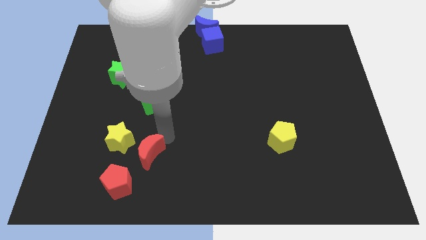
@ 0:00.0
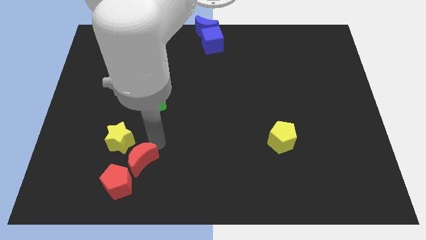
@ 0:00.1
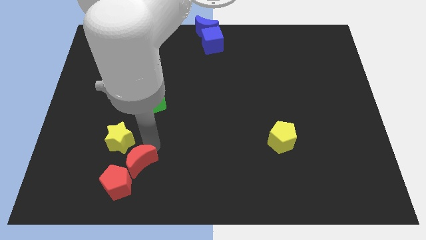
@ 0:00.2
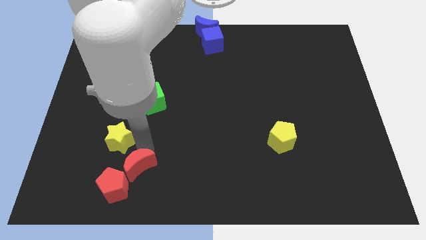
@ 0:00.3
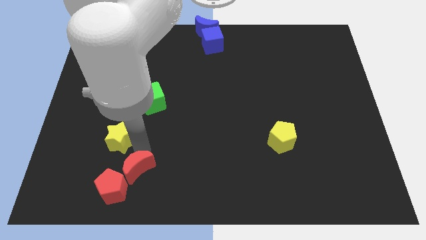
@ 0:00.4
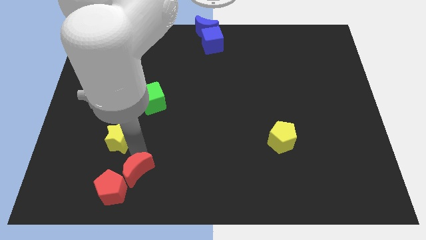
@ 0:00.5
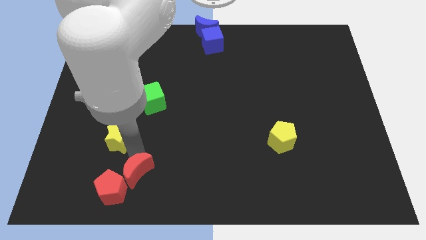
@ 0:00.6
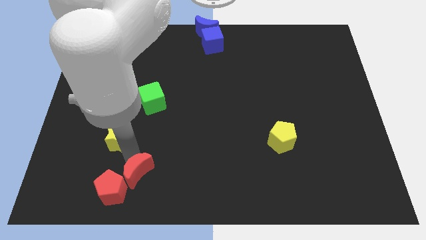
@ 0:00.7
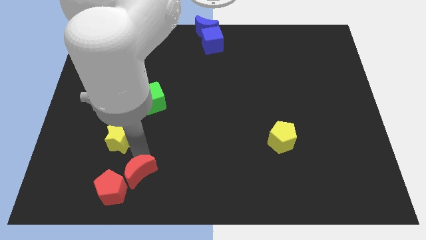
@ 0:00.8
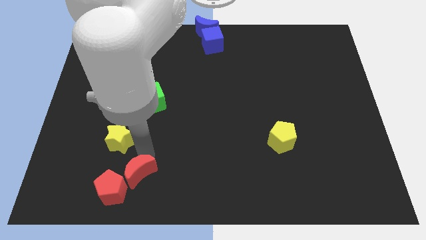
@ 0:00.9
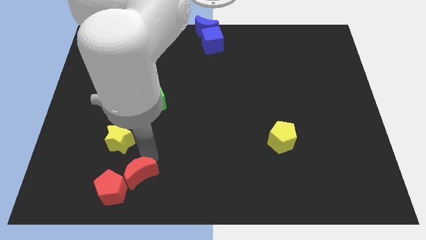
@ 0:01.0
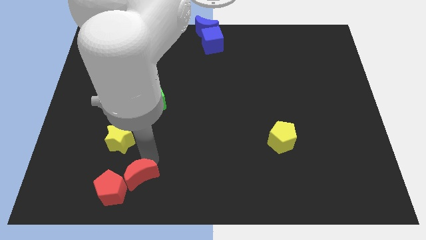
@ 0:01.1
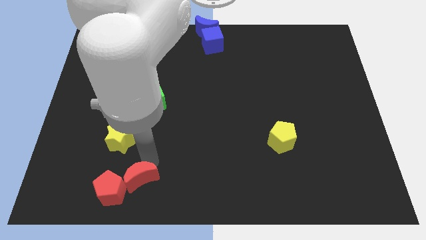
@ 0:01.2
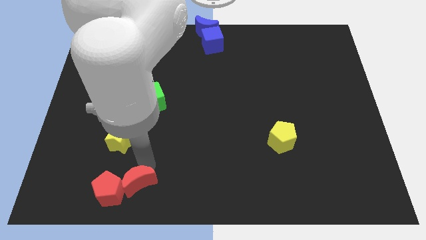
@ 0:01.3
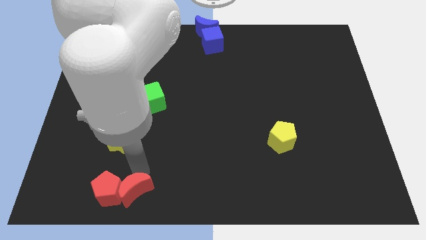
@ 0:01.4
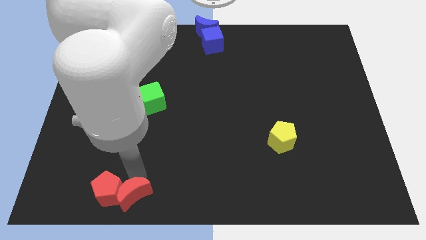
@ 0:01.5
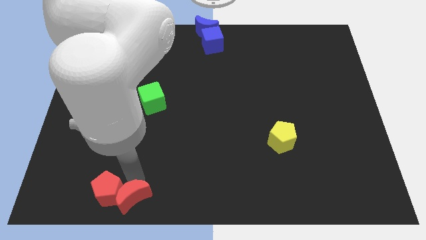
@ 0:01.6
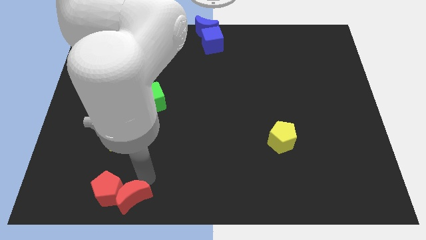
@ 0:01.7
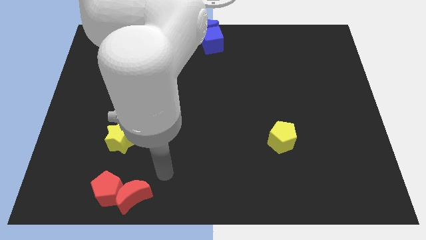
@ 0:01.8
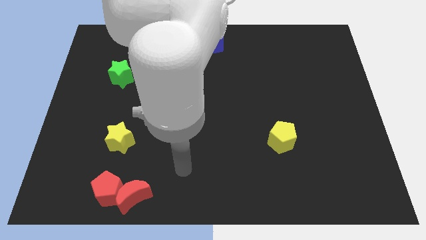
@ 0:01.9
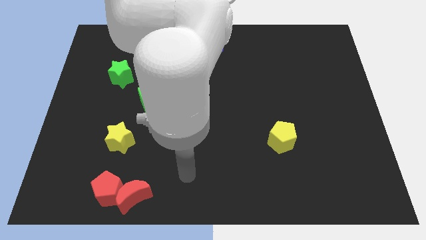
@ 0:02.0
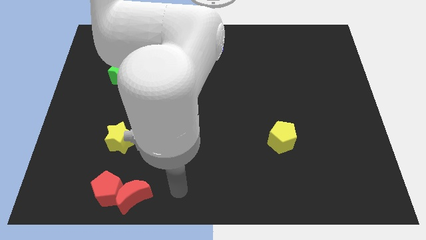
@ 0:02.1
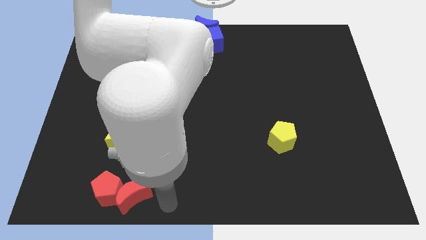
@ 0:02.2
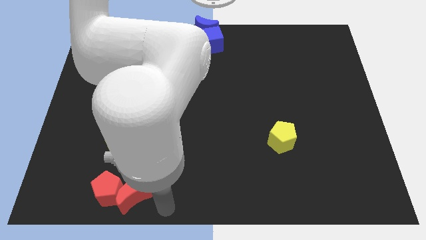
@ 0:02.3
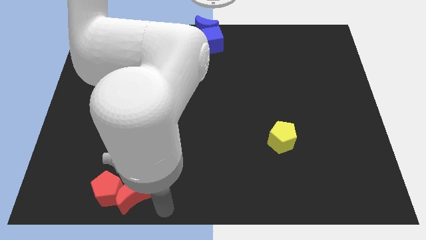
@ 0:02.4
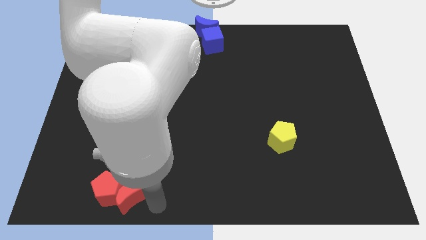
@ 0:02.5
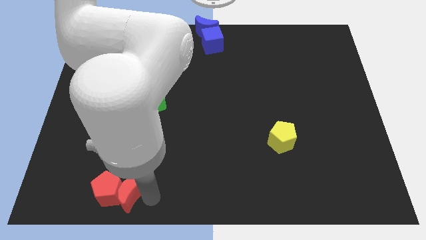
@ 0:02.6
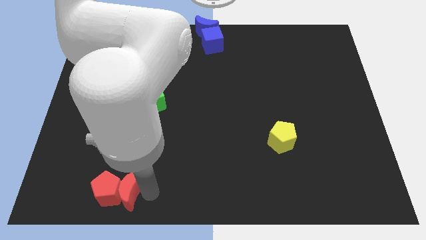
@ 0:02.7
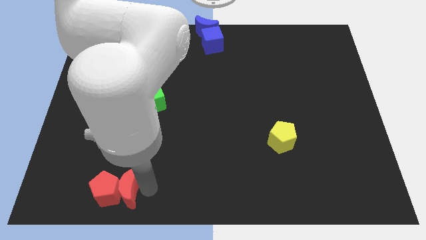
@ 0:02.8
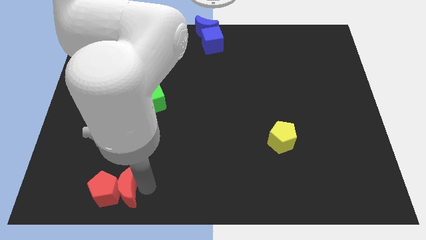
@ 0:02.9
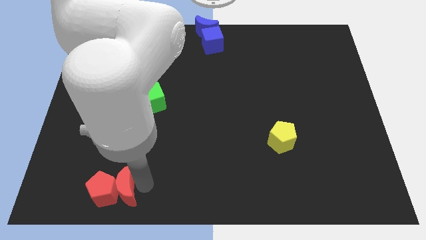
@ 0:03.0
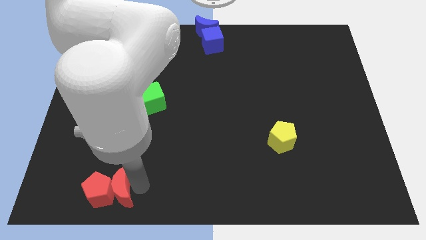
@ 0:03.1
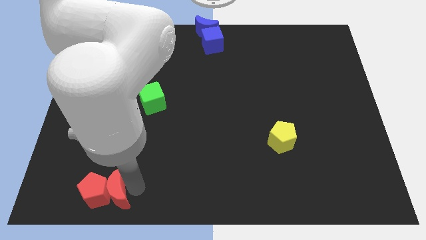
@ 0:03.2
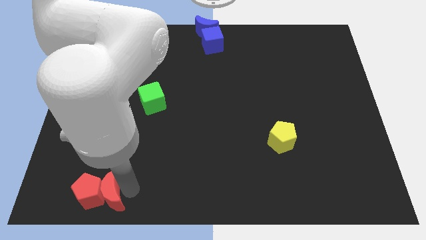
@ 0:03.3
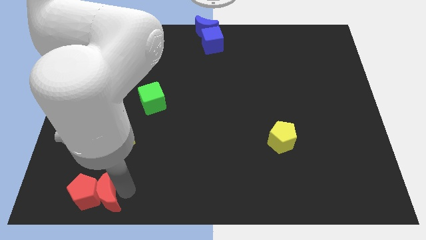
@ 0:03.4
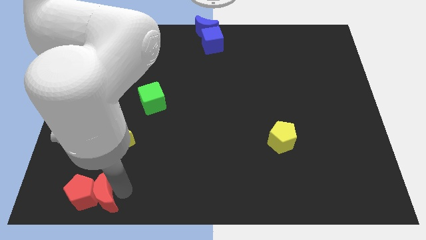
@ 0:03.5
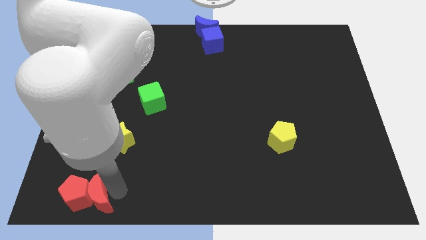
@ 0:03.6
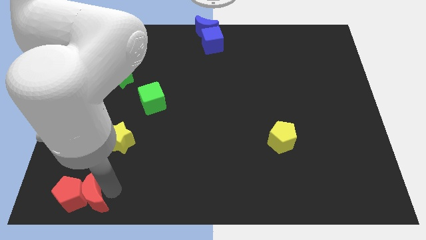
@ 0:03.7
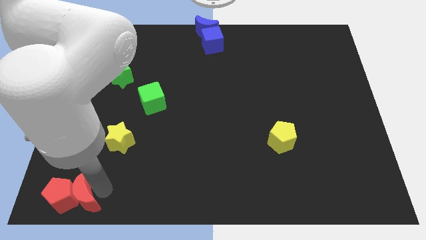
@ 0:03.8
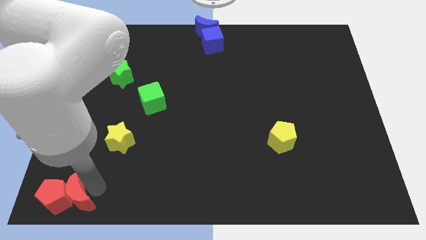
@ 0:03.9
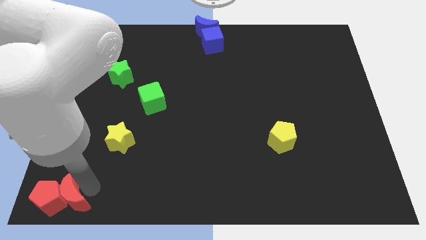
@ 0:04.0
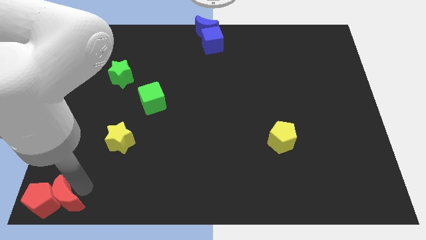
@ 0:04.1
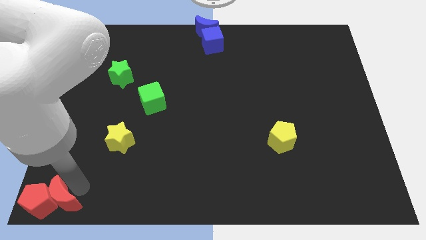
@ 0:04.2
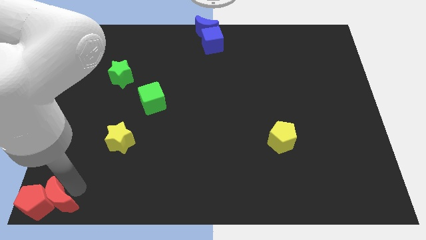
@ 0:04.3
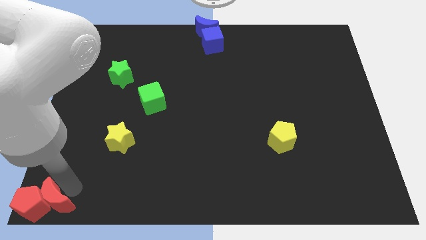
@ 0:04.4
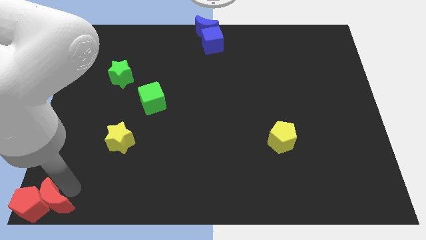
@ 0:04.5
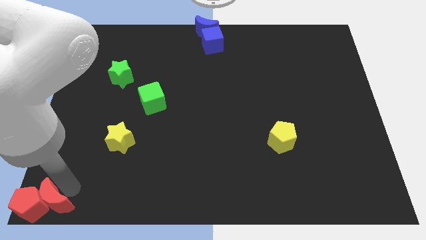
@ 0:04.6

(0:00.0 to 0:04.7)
move both the red pentagon and the red moon towards the bottom left side corner

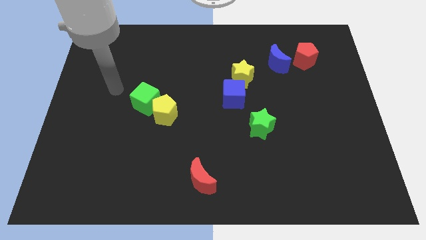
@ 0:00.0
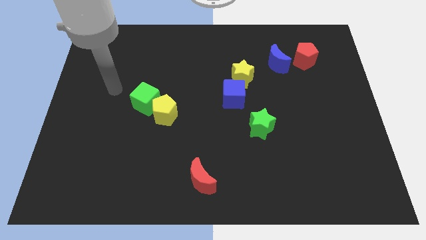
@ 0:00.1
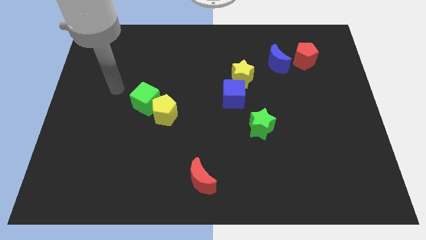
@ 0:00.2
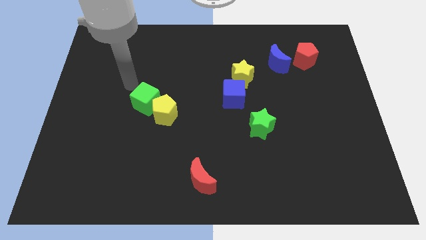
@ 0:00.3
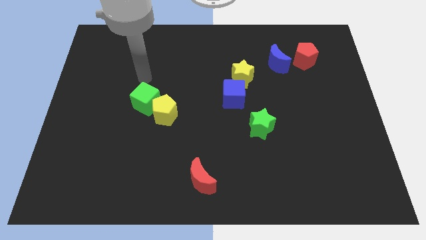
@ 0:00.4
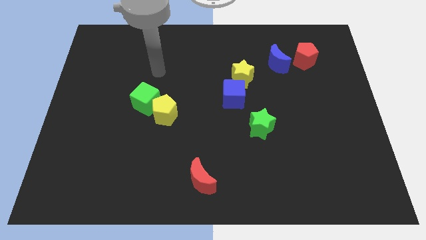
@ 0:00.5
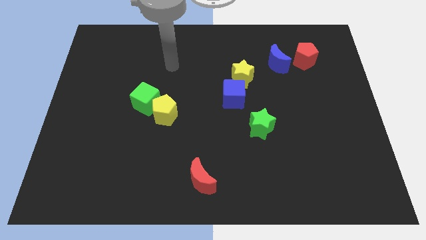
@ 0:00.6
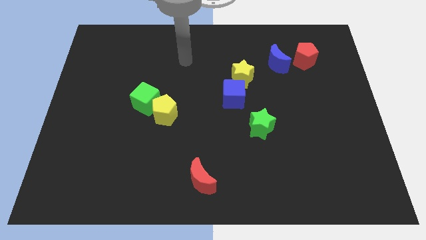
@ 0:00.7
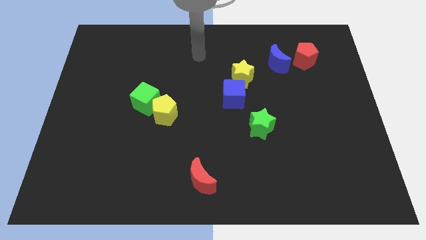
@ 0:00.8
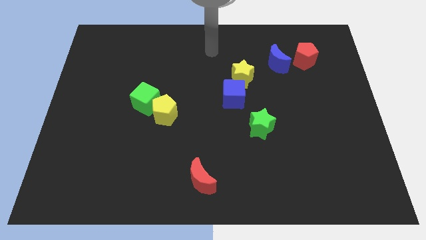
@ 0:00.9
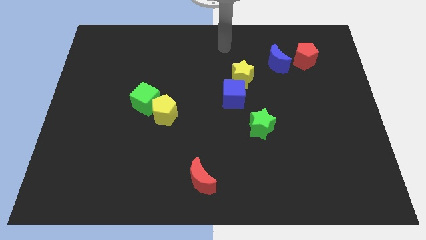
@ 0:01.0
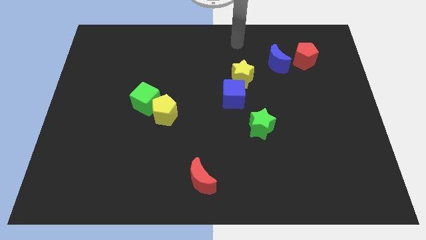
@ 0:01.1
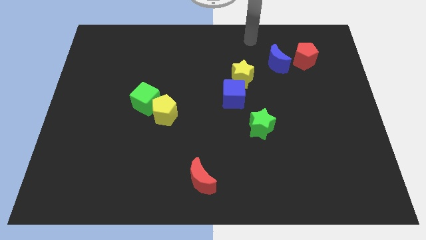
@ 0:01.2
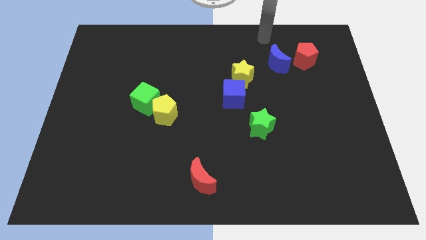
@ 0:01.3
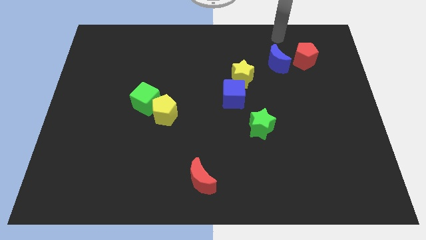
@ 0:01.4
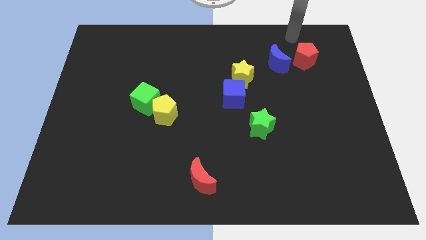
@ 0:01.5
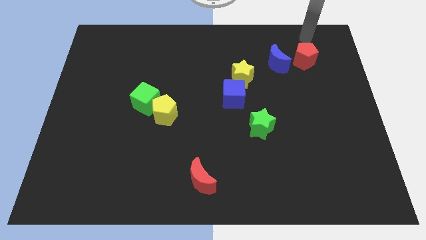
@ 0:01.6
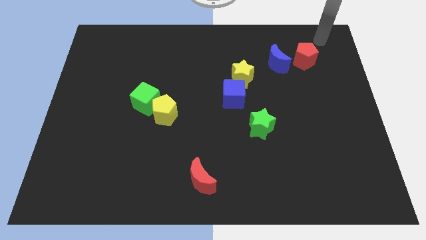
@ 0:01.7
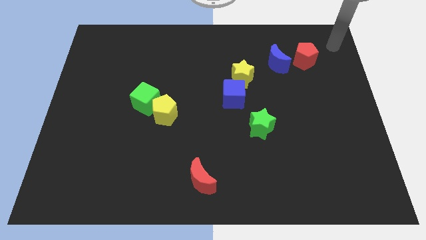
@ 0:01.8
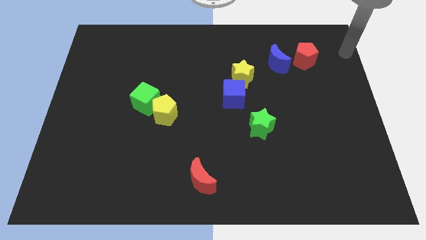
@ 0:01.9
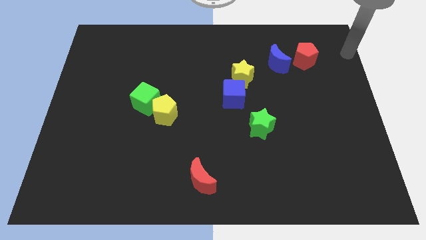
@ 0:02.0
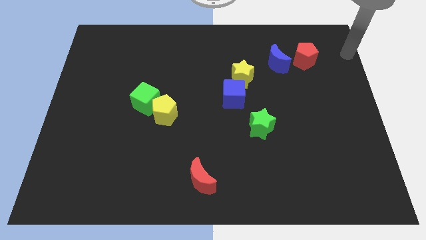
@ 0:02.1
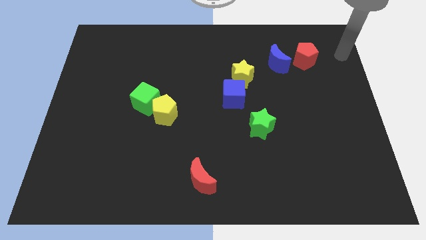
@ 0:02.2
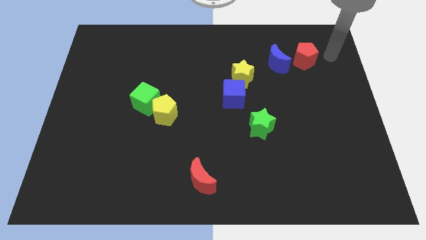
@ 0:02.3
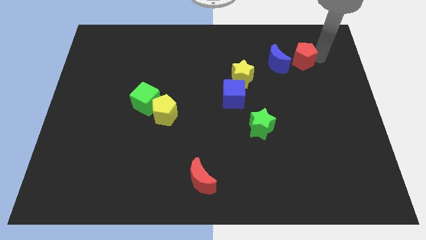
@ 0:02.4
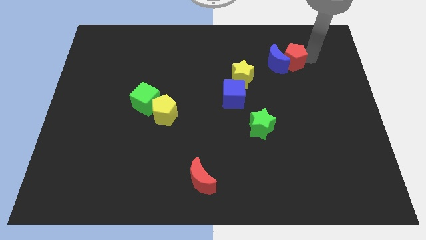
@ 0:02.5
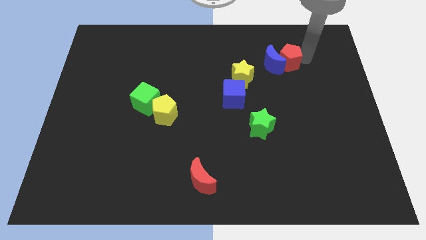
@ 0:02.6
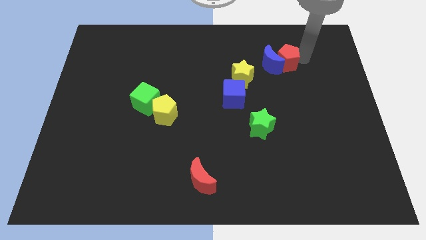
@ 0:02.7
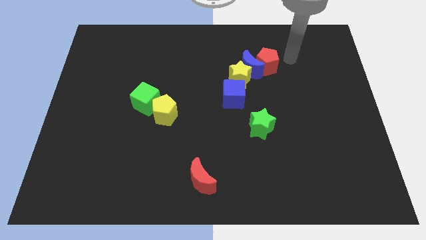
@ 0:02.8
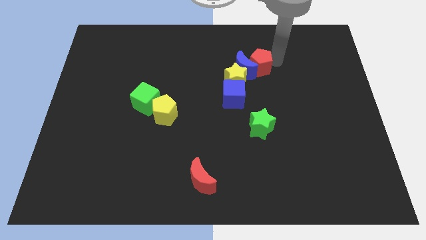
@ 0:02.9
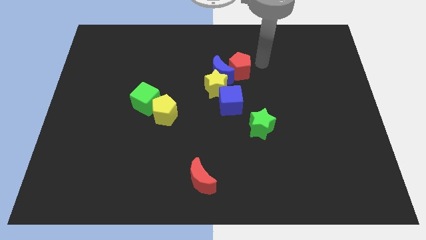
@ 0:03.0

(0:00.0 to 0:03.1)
move the red pentagon into the blue crescent

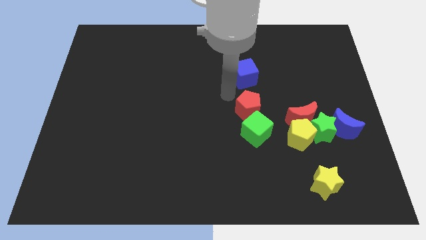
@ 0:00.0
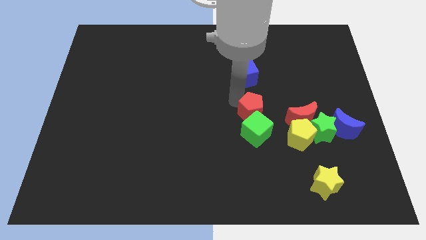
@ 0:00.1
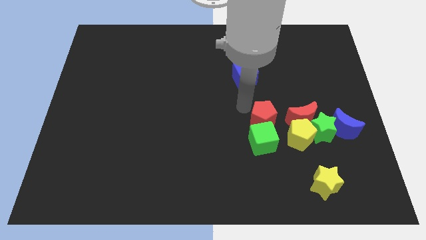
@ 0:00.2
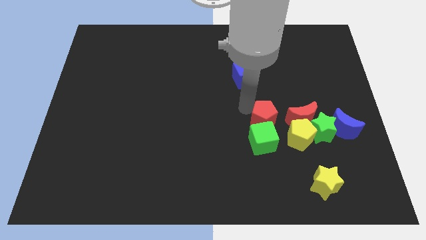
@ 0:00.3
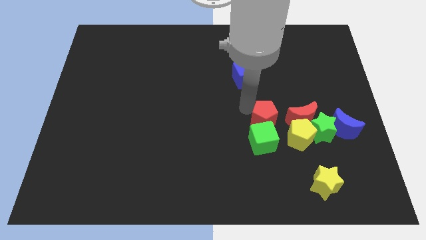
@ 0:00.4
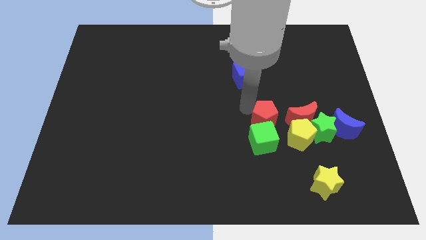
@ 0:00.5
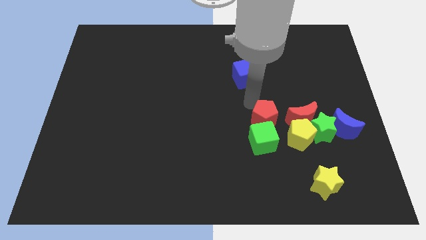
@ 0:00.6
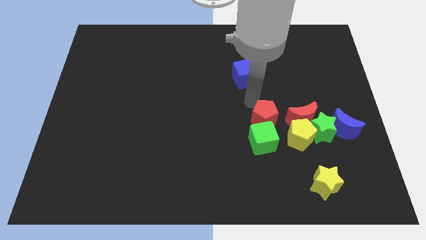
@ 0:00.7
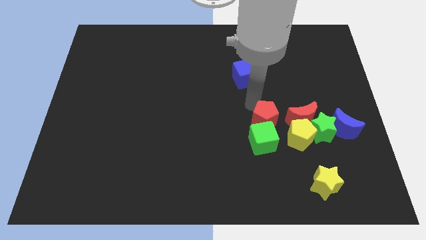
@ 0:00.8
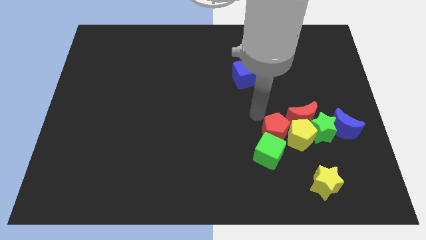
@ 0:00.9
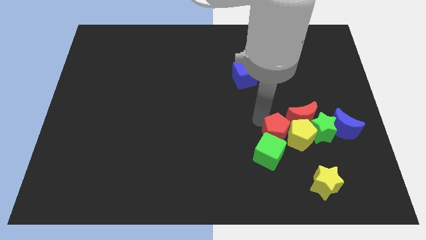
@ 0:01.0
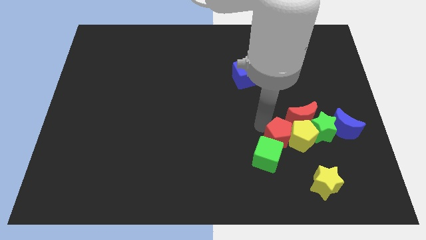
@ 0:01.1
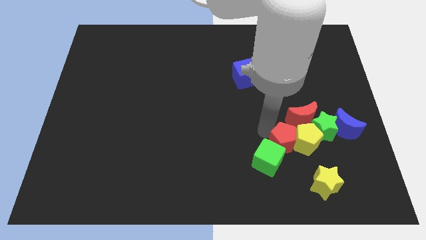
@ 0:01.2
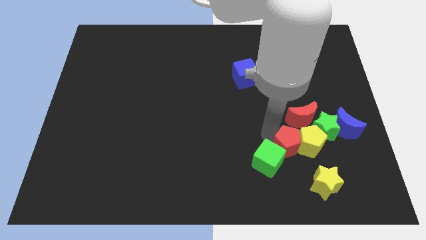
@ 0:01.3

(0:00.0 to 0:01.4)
drag the red pentagon and place it next to the yellow pentagon
